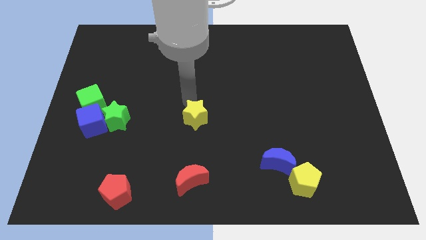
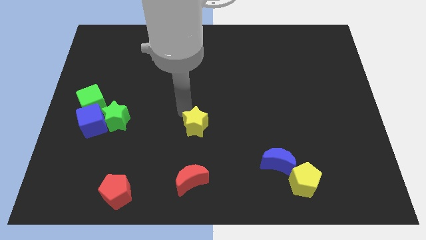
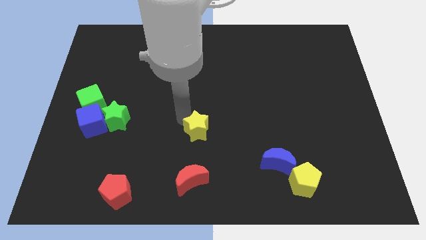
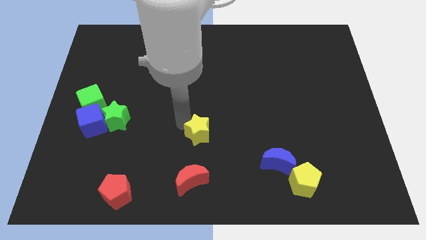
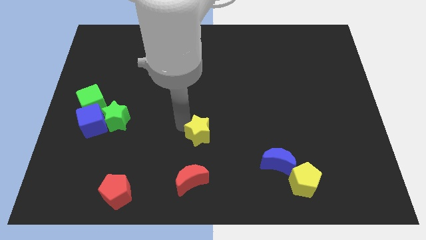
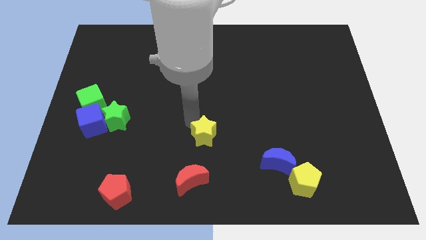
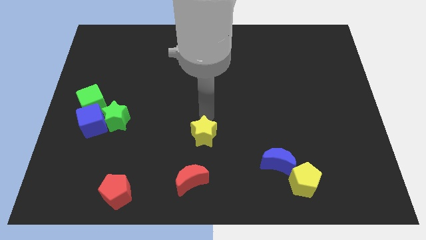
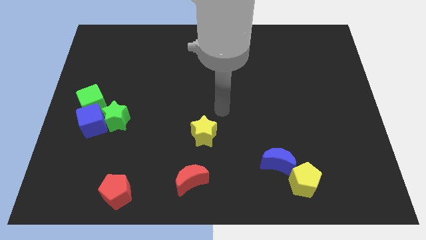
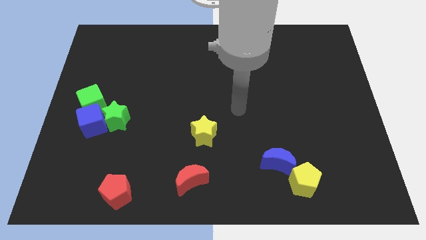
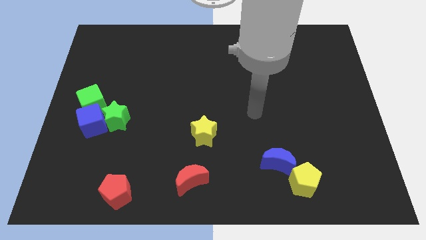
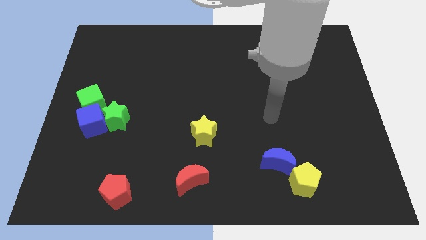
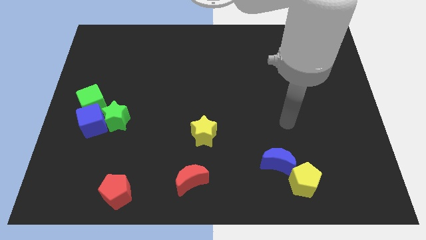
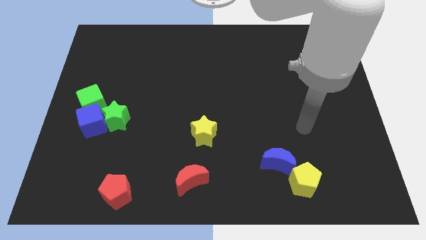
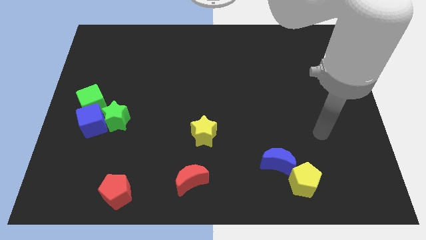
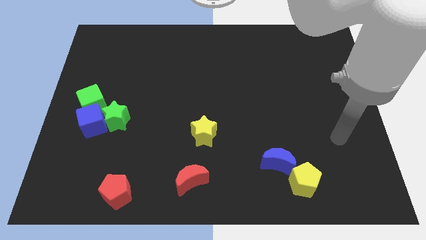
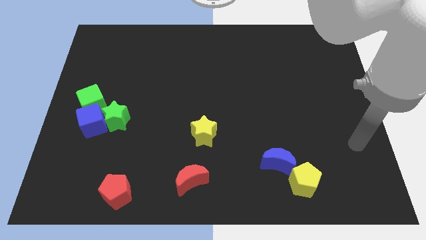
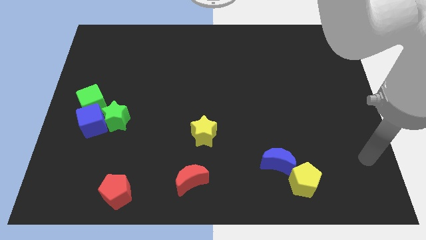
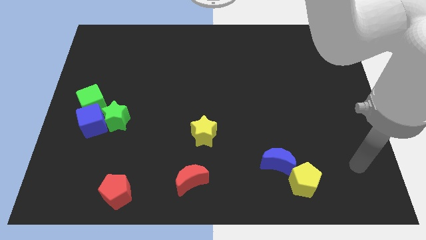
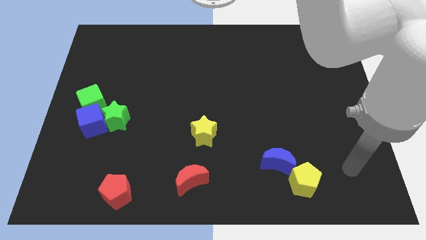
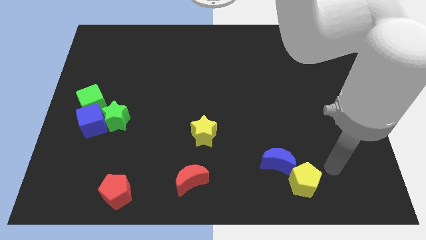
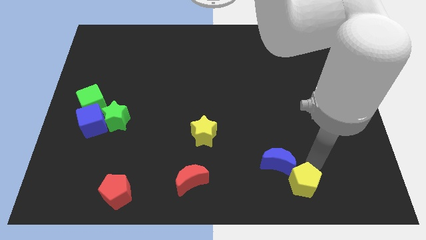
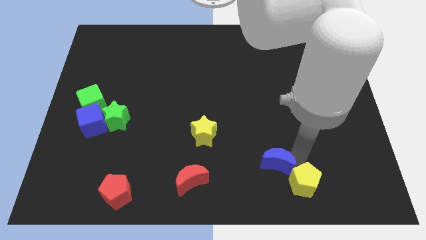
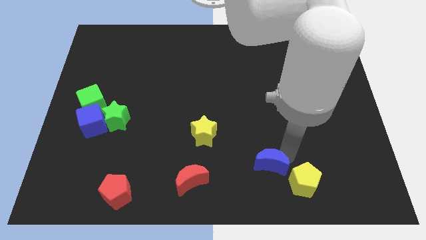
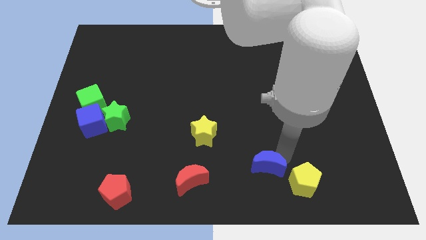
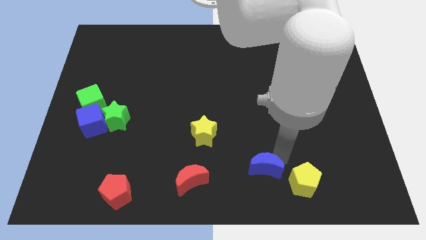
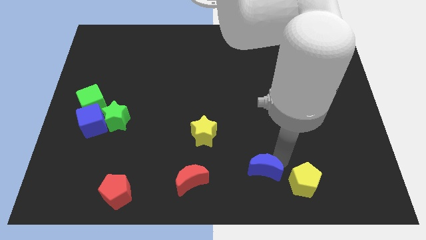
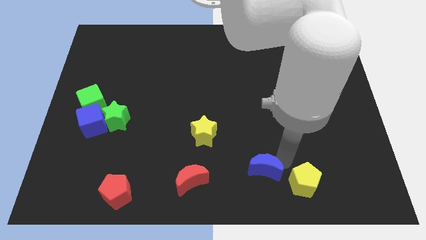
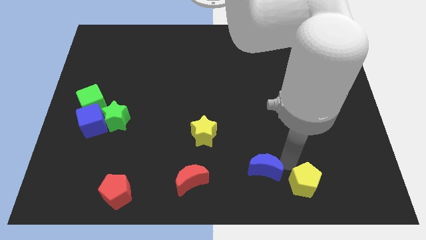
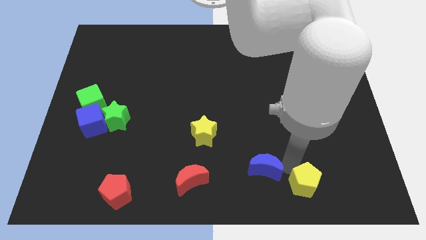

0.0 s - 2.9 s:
place your arm in between blue cube and yellow pentagon

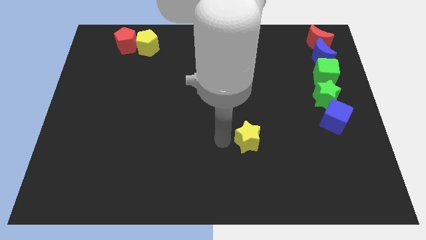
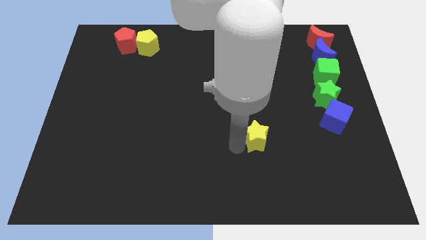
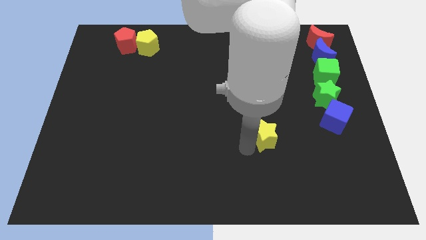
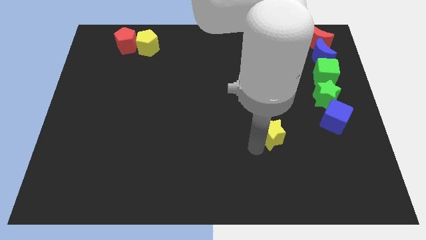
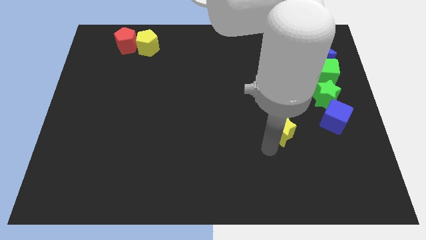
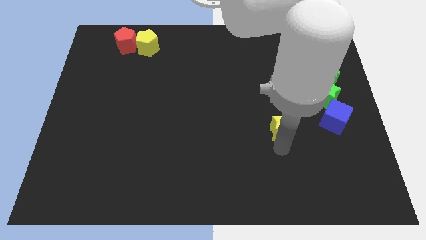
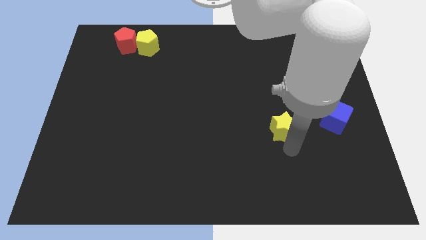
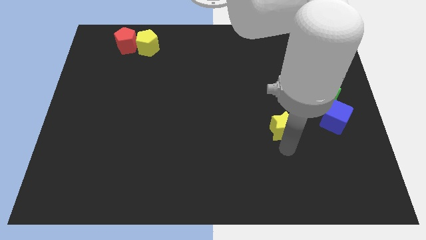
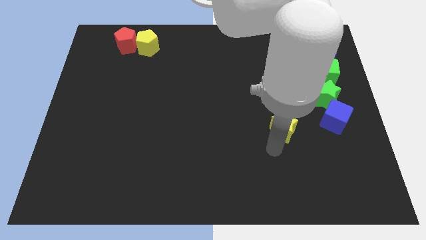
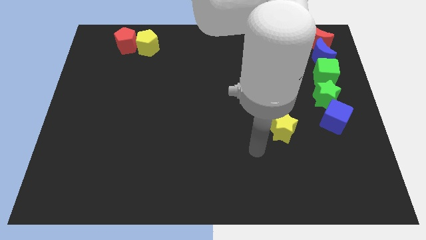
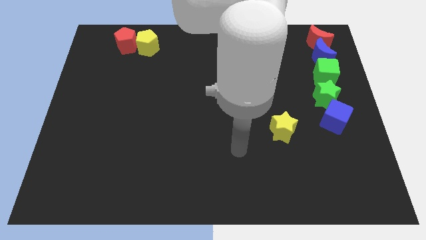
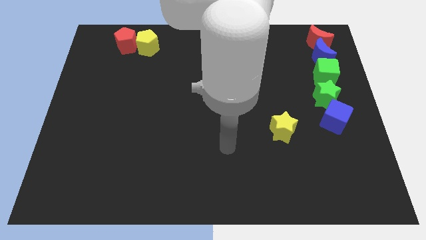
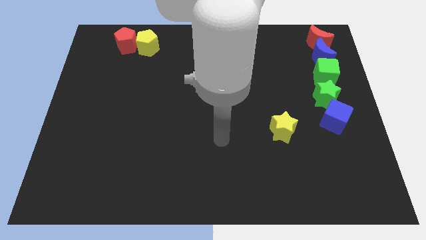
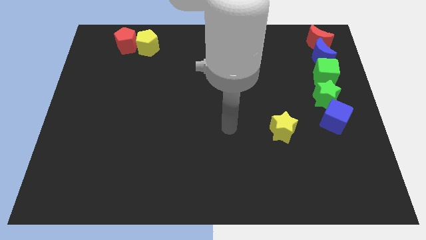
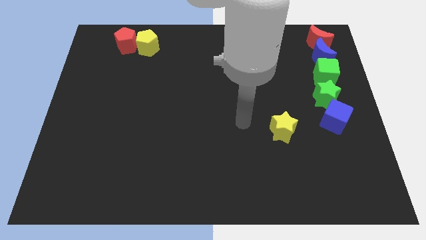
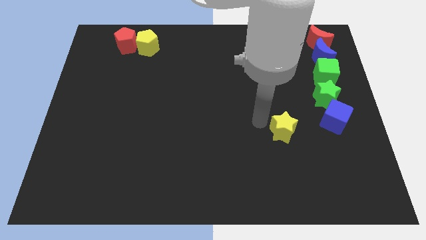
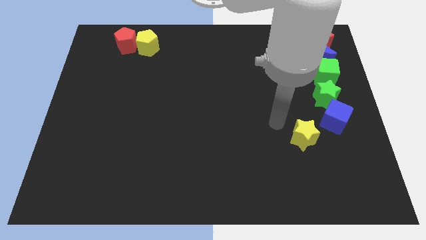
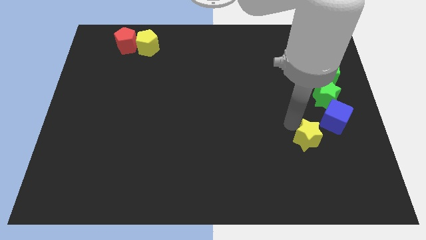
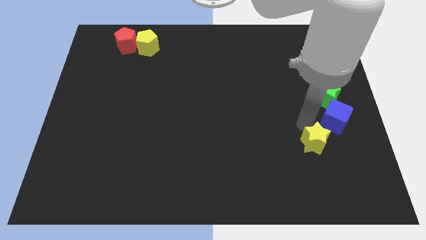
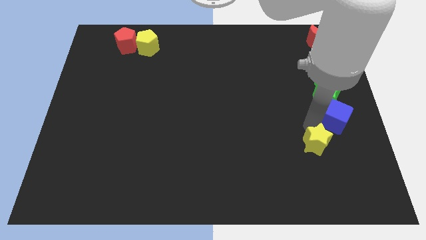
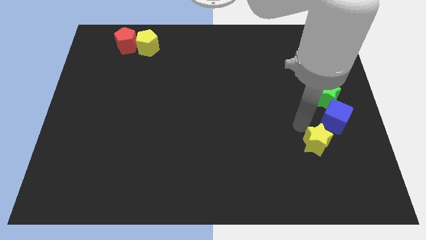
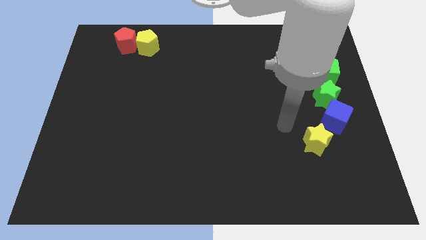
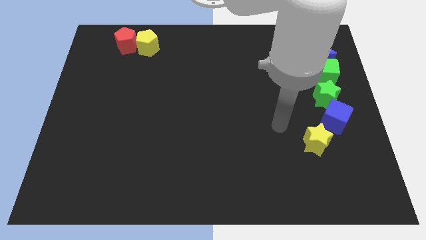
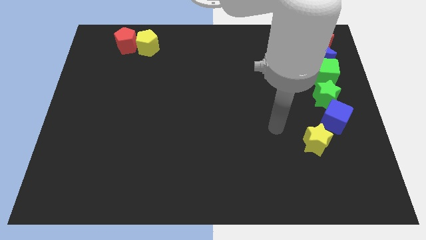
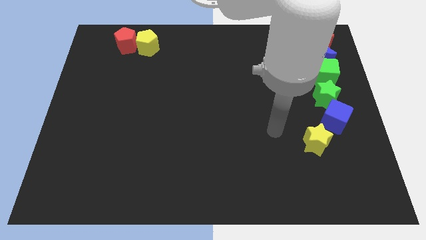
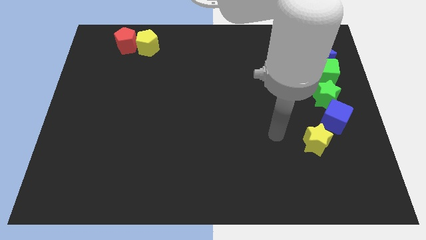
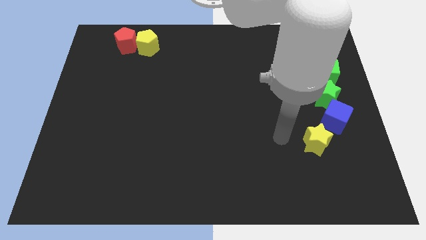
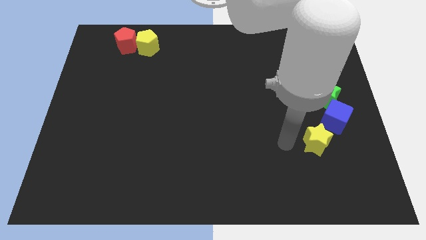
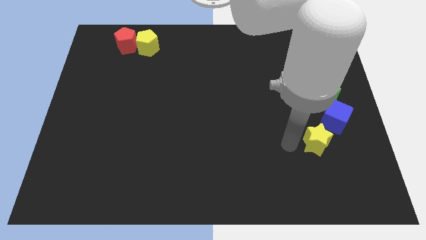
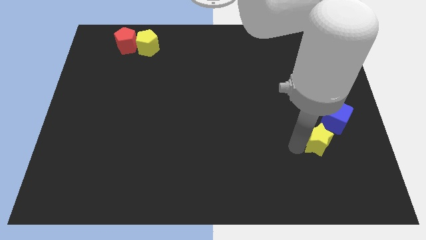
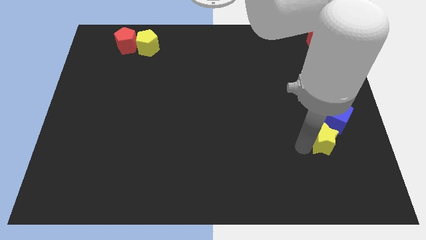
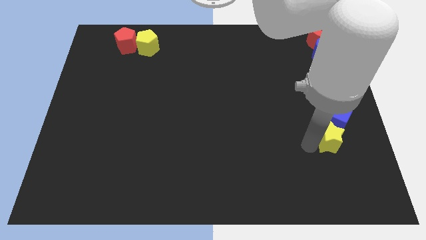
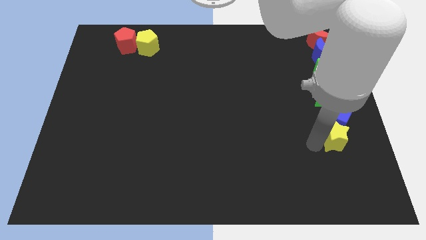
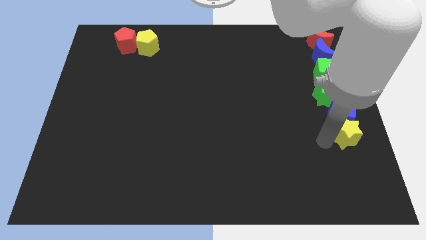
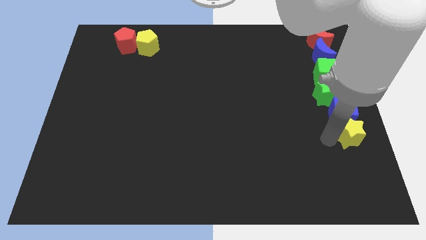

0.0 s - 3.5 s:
push yellow star below blue cube

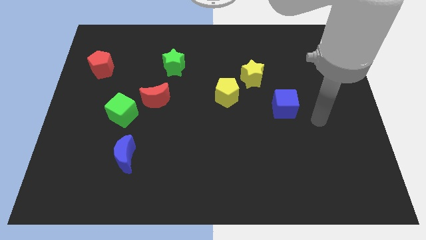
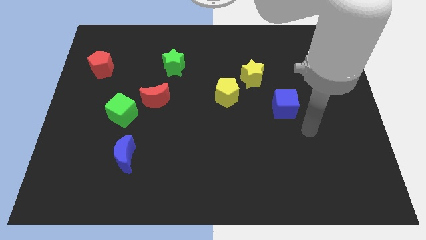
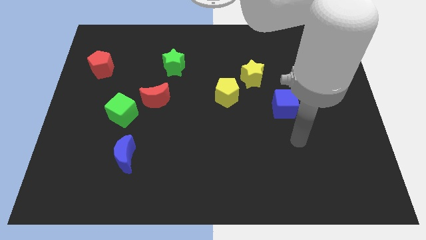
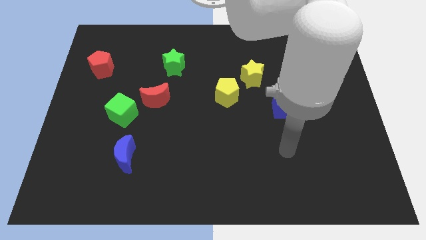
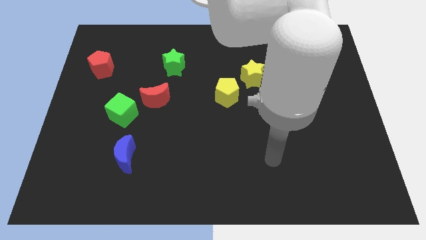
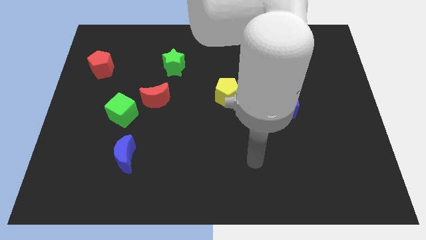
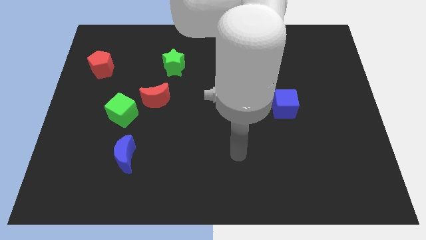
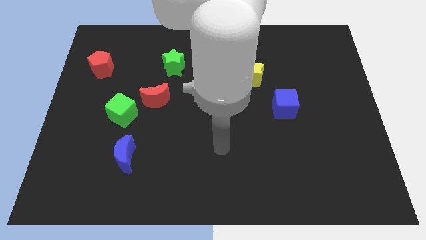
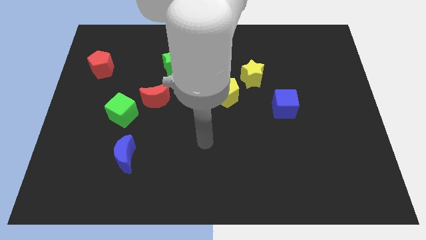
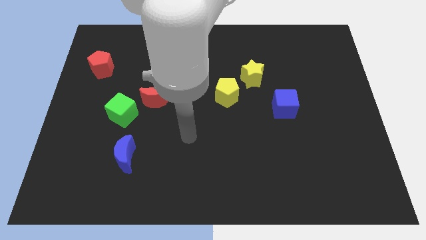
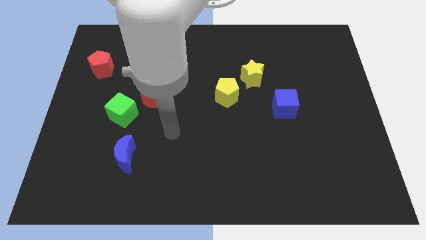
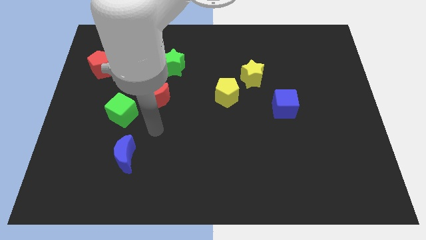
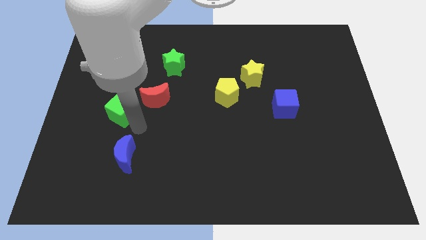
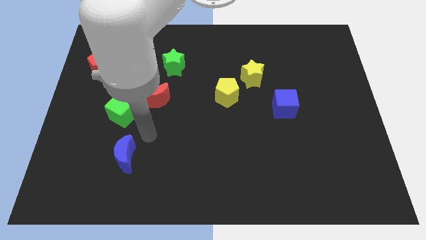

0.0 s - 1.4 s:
place your arm right to green cube

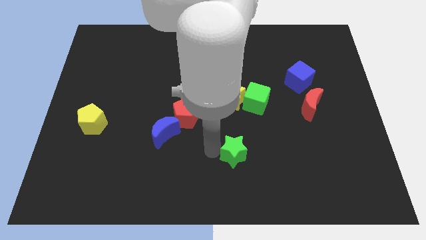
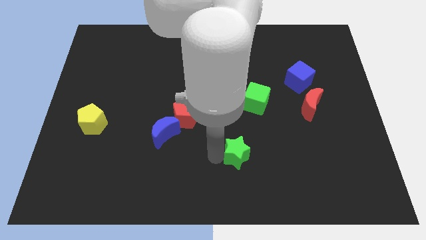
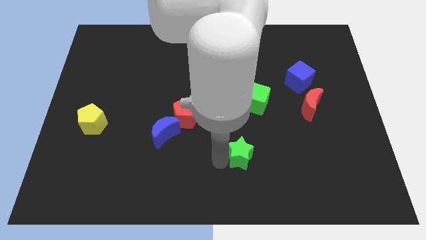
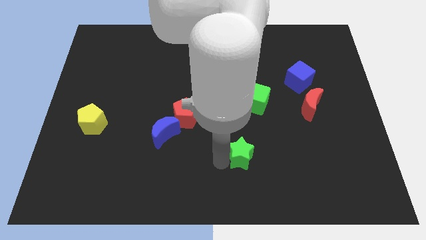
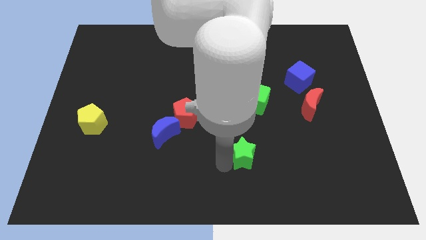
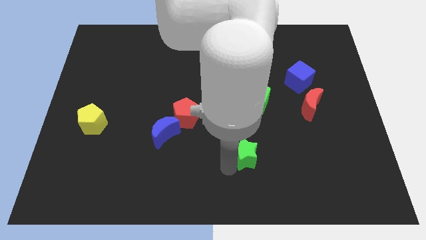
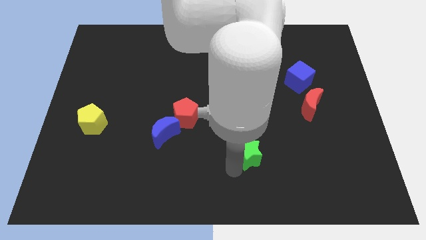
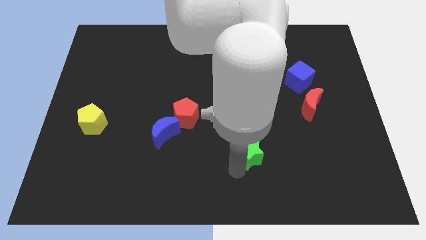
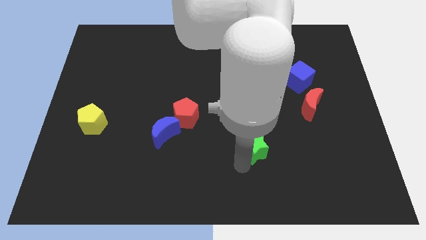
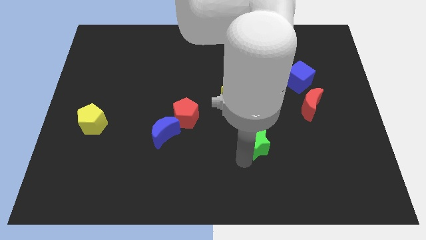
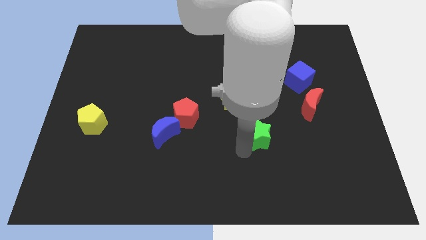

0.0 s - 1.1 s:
move green star below the green cube
